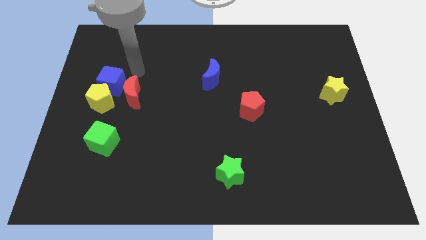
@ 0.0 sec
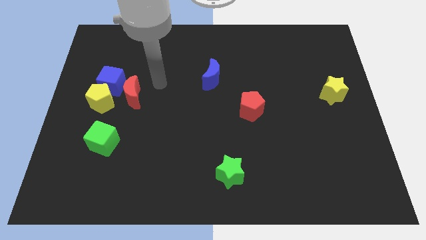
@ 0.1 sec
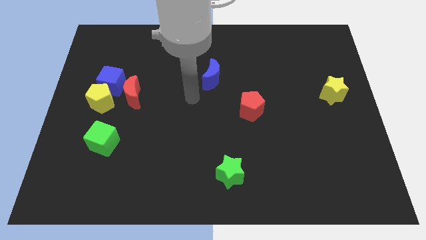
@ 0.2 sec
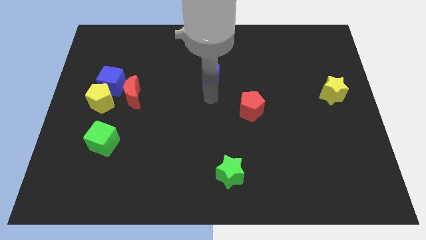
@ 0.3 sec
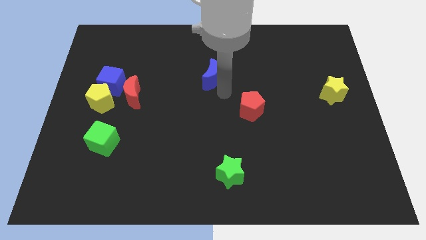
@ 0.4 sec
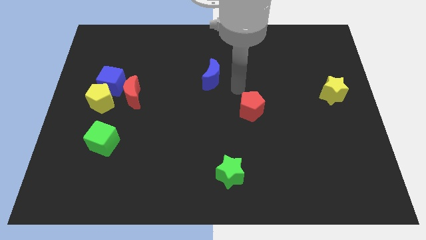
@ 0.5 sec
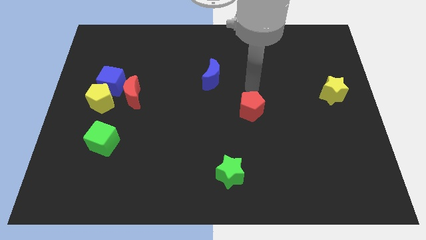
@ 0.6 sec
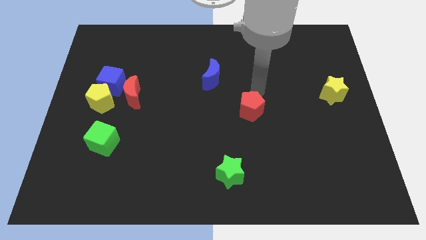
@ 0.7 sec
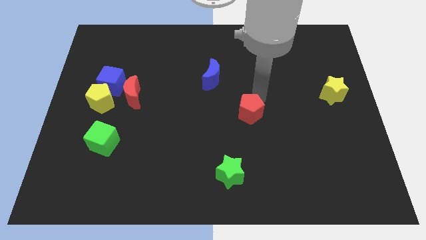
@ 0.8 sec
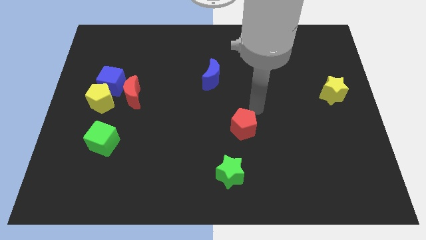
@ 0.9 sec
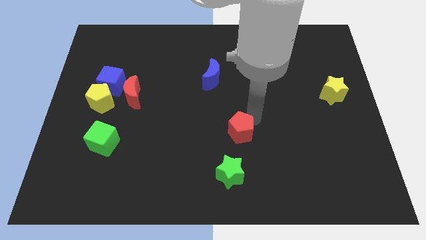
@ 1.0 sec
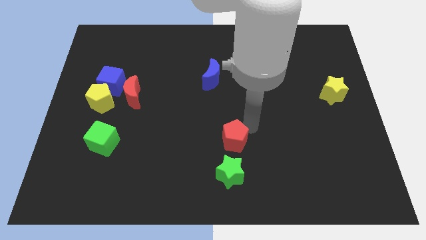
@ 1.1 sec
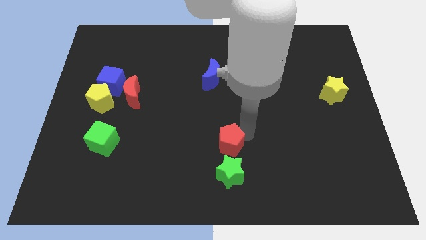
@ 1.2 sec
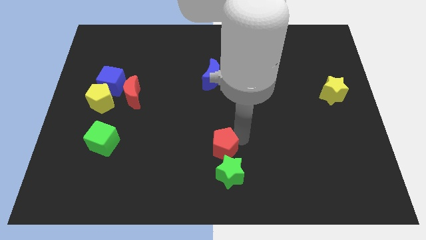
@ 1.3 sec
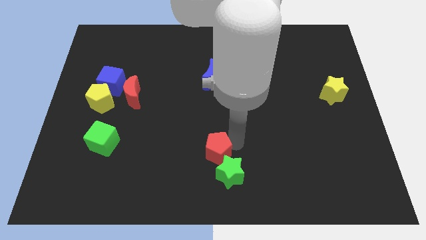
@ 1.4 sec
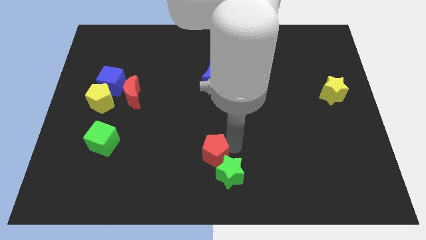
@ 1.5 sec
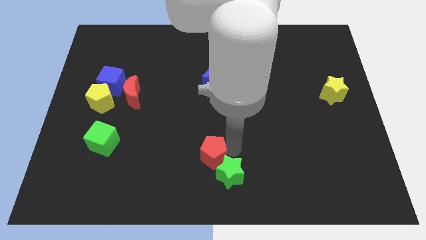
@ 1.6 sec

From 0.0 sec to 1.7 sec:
slide the red pentagon to the green star

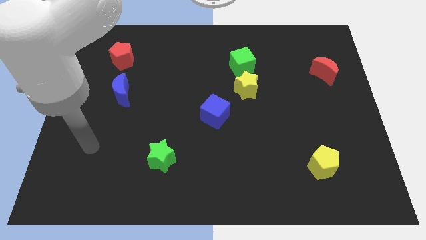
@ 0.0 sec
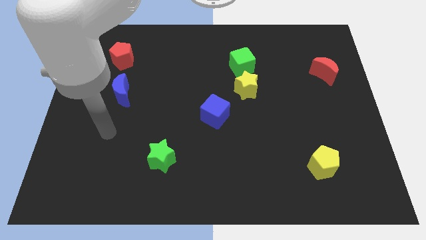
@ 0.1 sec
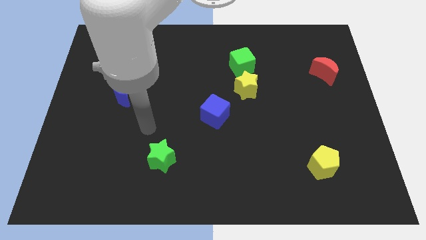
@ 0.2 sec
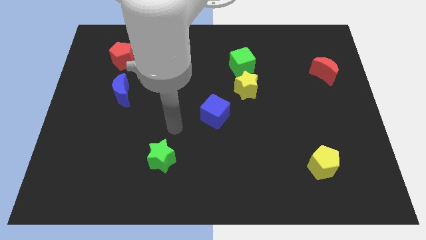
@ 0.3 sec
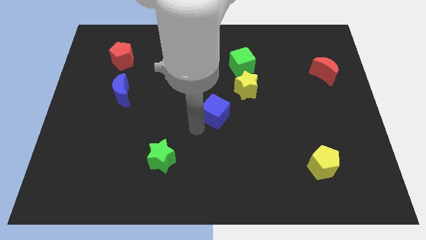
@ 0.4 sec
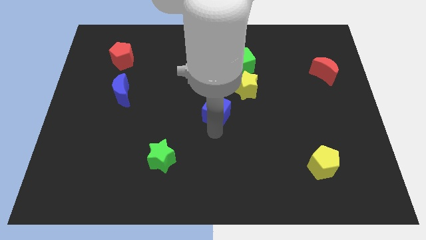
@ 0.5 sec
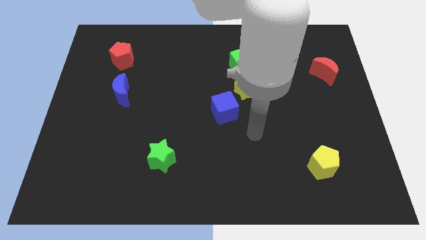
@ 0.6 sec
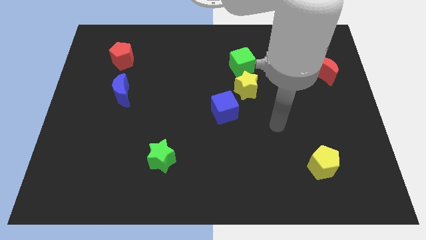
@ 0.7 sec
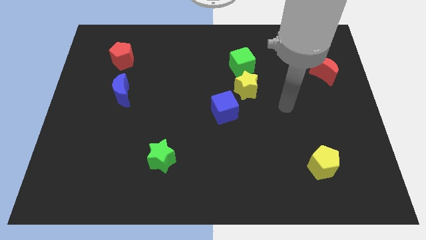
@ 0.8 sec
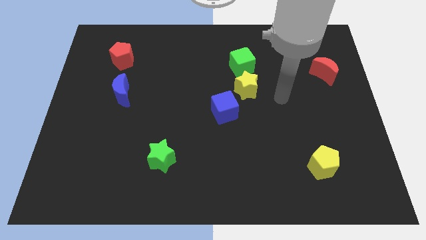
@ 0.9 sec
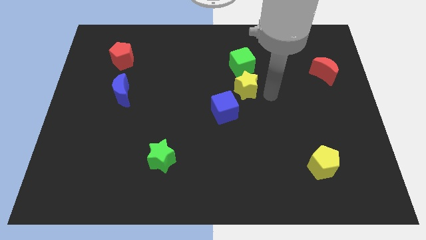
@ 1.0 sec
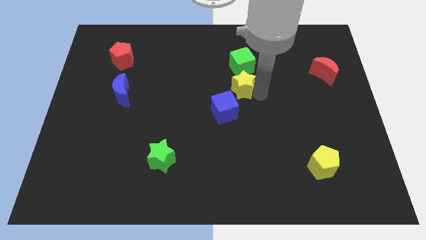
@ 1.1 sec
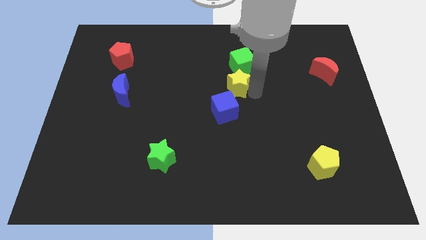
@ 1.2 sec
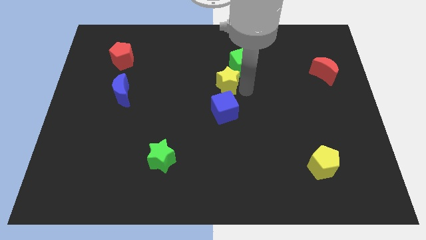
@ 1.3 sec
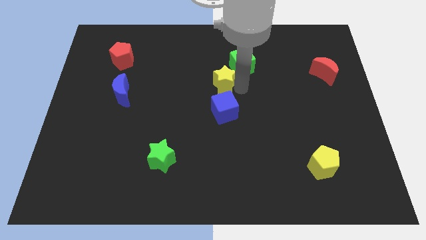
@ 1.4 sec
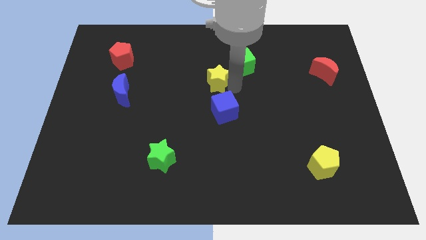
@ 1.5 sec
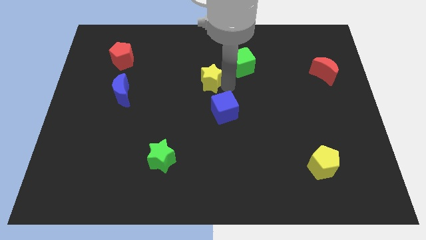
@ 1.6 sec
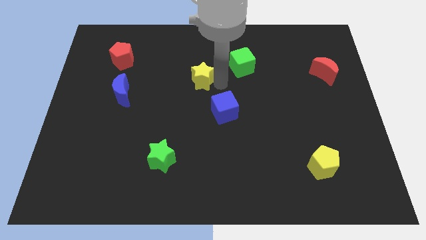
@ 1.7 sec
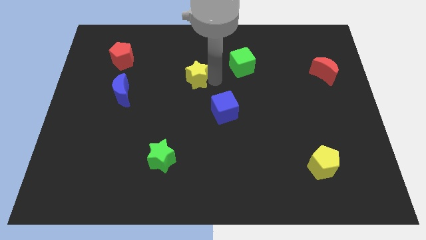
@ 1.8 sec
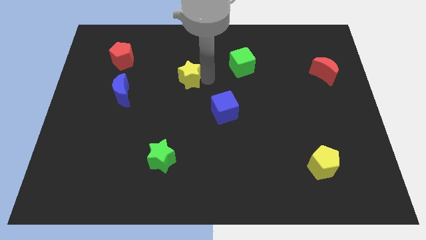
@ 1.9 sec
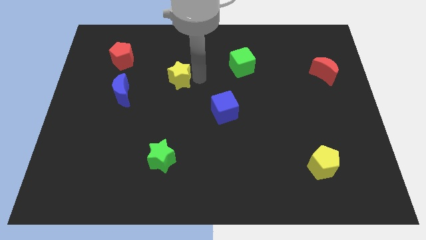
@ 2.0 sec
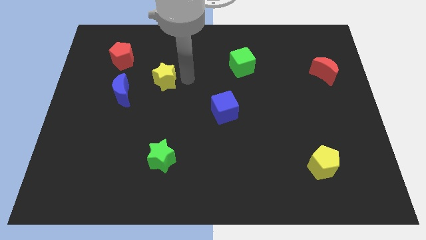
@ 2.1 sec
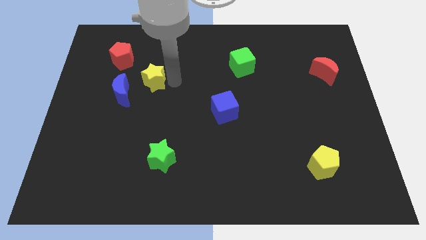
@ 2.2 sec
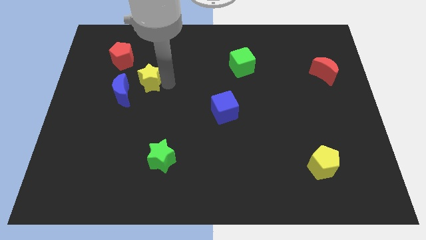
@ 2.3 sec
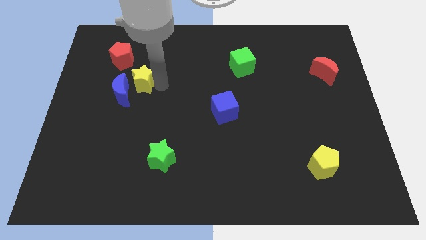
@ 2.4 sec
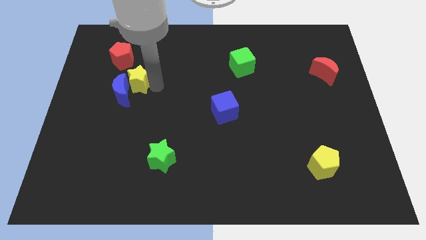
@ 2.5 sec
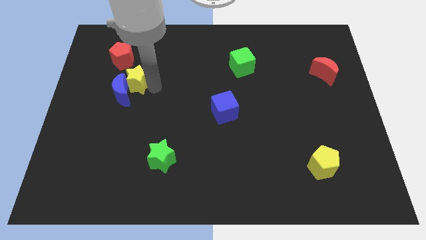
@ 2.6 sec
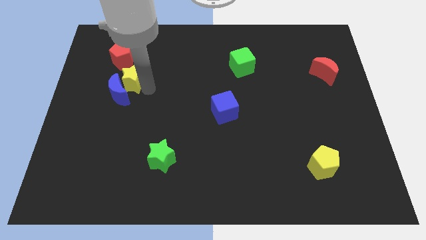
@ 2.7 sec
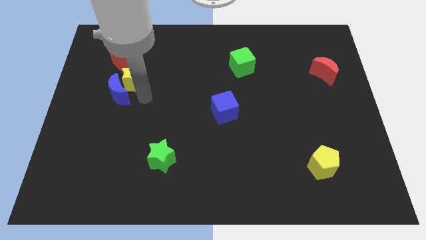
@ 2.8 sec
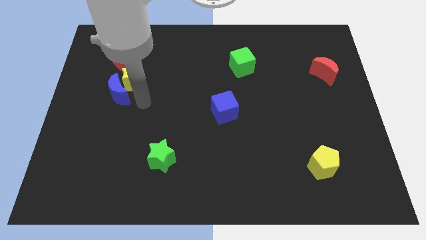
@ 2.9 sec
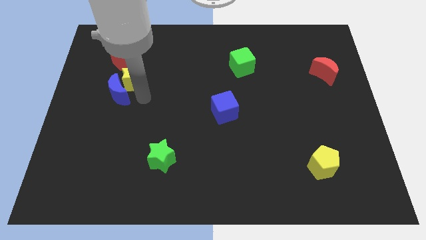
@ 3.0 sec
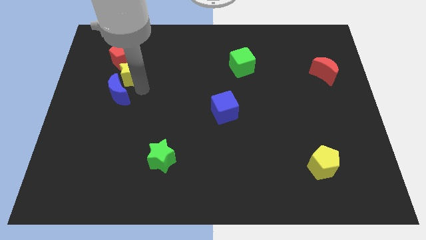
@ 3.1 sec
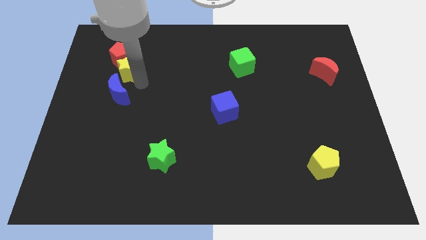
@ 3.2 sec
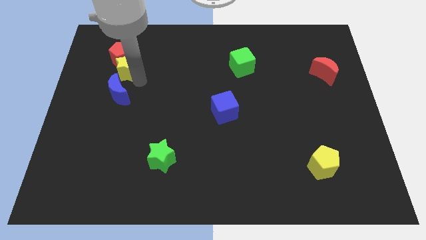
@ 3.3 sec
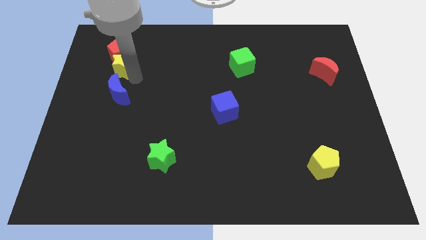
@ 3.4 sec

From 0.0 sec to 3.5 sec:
push the yellow star towards the red pentagon

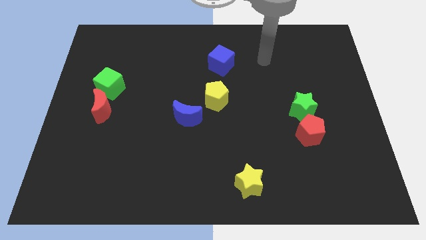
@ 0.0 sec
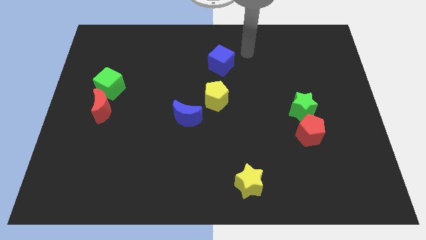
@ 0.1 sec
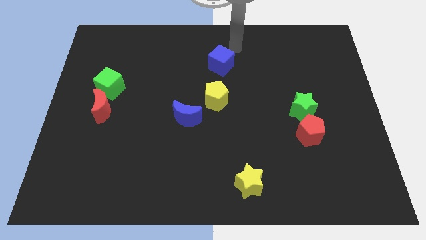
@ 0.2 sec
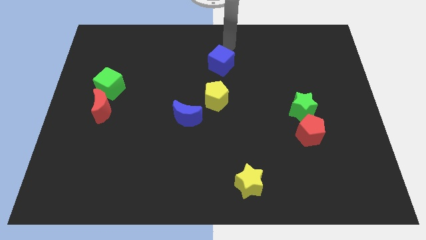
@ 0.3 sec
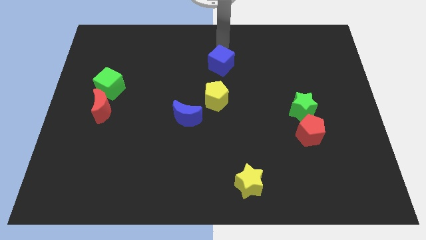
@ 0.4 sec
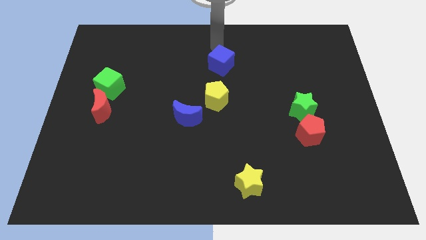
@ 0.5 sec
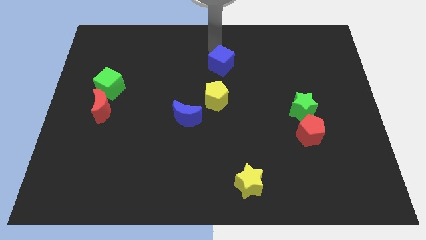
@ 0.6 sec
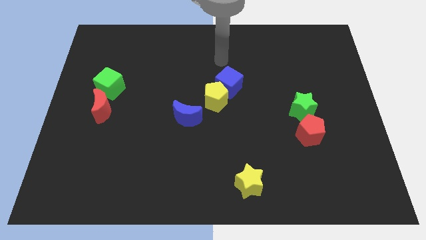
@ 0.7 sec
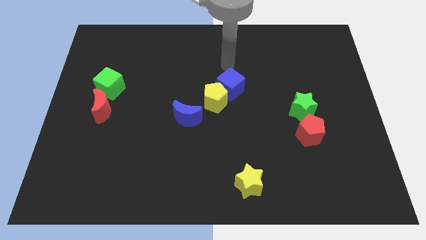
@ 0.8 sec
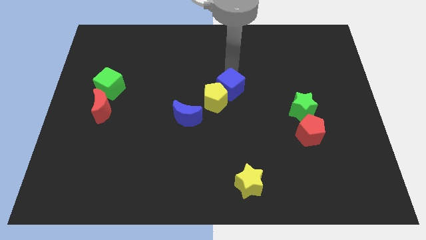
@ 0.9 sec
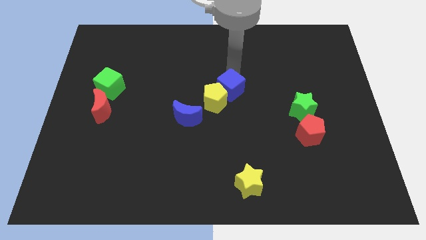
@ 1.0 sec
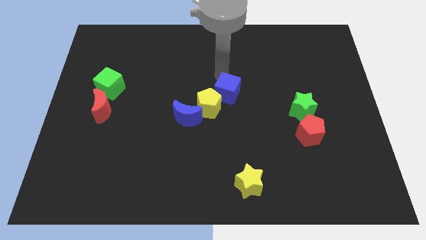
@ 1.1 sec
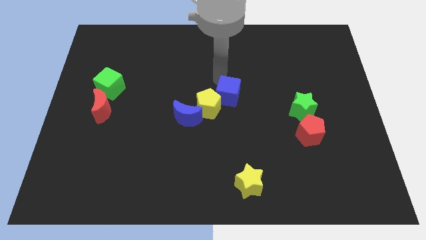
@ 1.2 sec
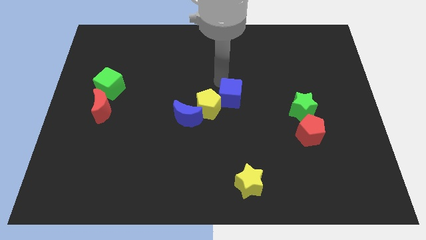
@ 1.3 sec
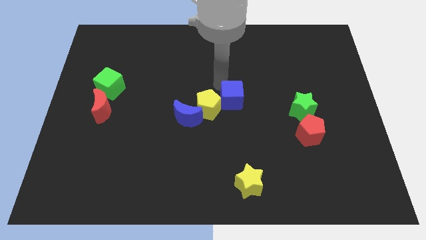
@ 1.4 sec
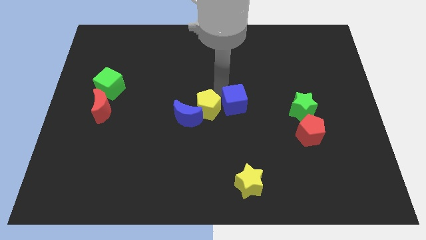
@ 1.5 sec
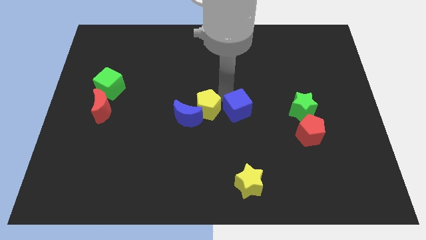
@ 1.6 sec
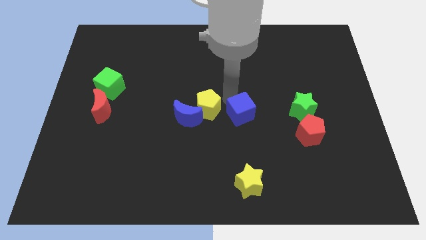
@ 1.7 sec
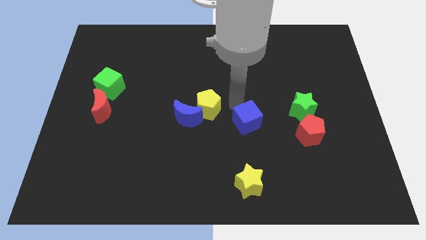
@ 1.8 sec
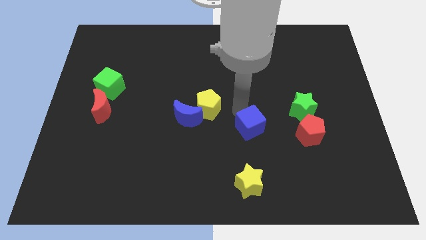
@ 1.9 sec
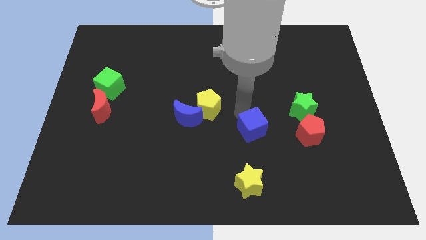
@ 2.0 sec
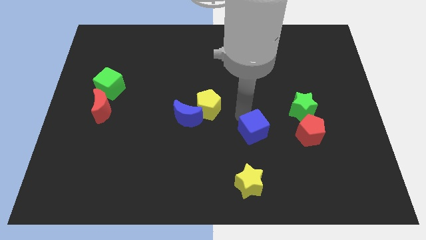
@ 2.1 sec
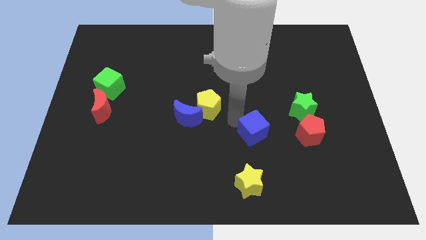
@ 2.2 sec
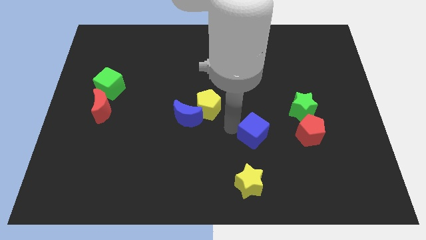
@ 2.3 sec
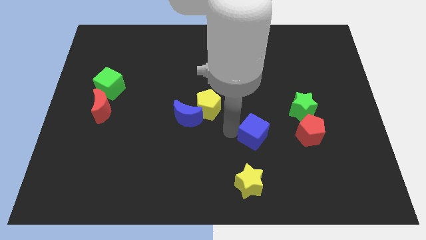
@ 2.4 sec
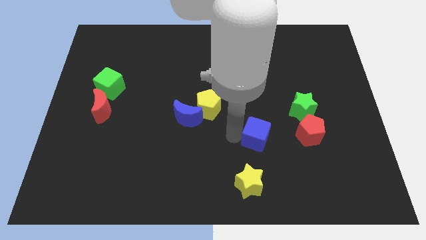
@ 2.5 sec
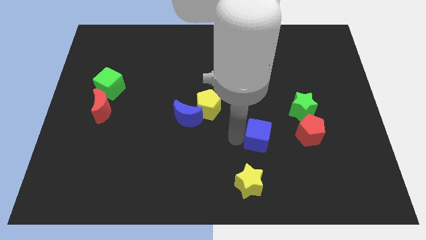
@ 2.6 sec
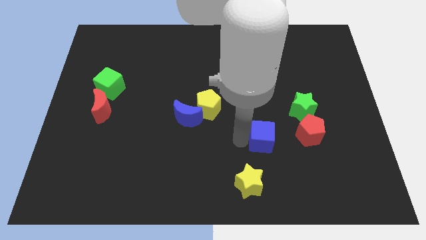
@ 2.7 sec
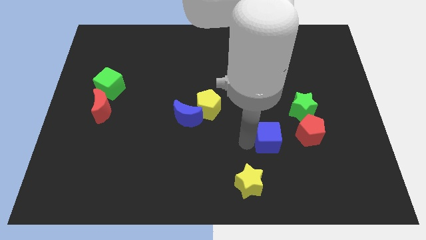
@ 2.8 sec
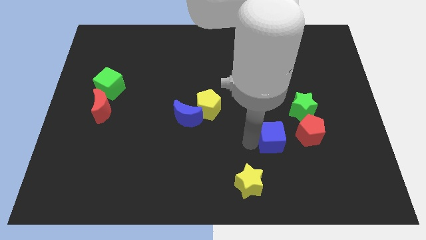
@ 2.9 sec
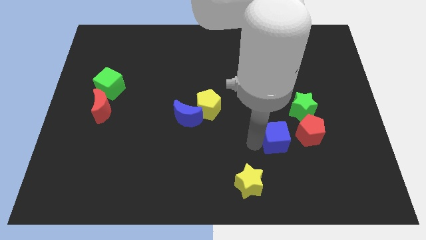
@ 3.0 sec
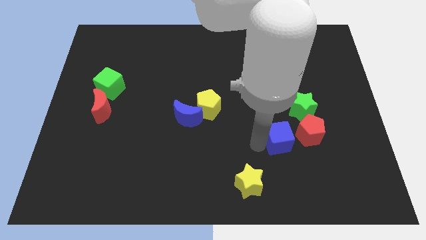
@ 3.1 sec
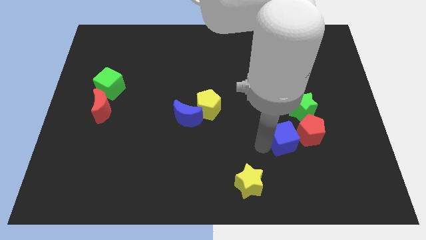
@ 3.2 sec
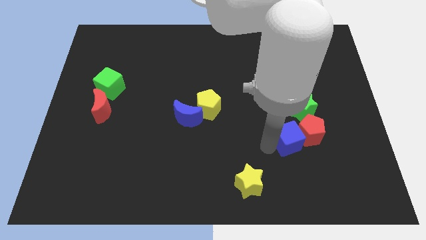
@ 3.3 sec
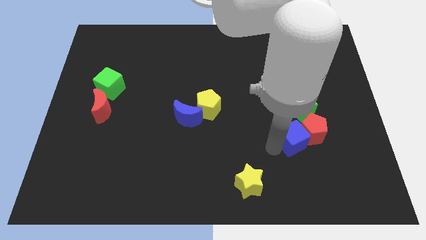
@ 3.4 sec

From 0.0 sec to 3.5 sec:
put the blue cube next to the red pentagon

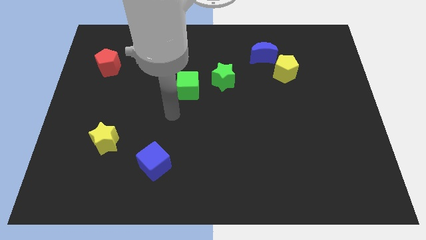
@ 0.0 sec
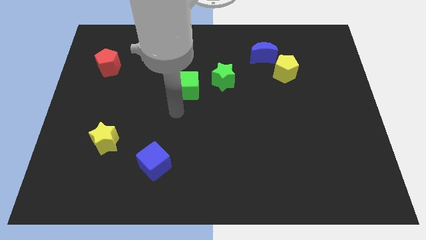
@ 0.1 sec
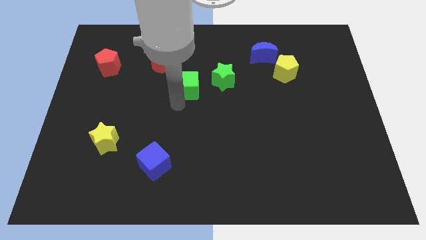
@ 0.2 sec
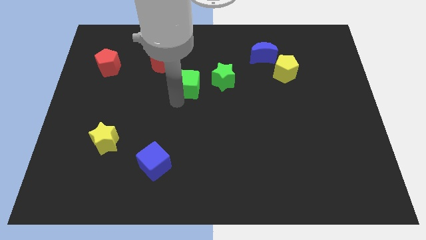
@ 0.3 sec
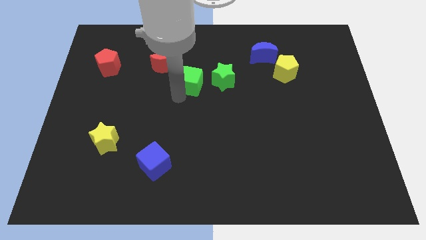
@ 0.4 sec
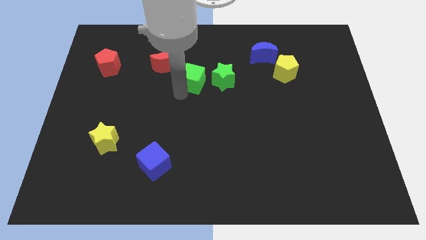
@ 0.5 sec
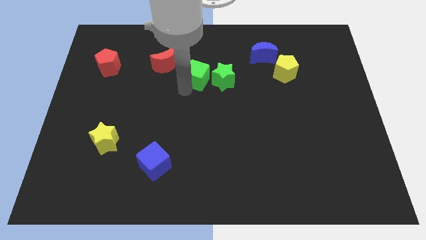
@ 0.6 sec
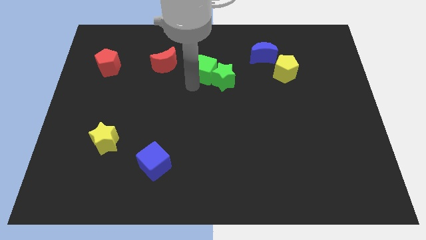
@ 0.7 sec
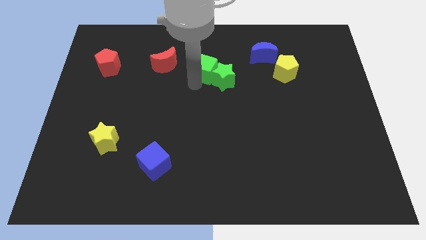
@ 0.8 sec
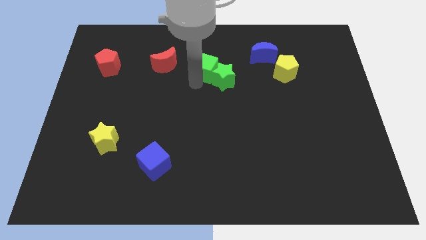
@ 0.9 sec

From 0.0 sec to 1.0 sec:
put the green cube towards the green star
